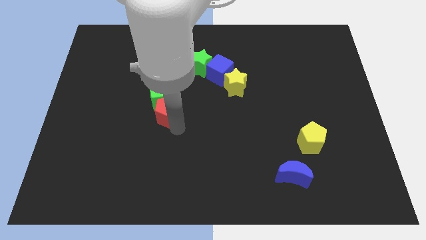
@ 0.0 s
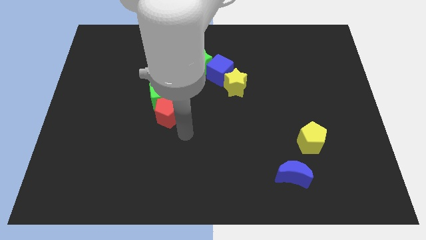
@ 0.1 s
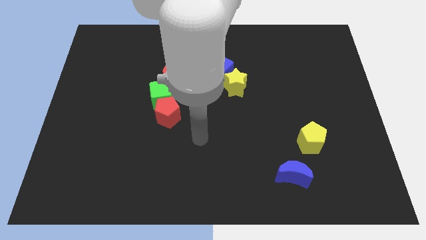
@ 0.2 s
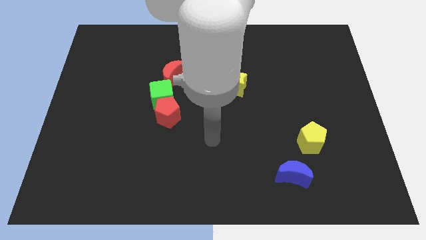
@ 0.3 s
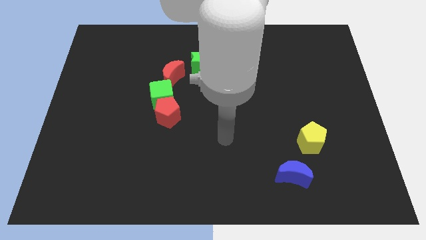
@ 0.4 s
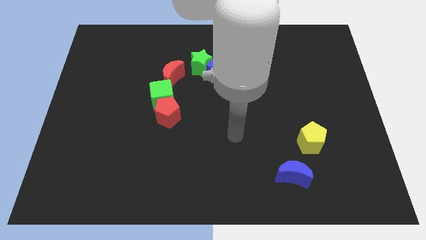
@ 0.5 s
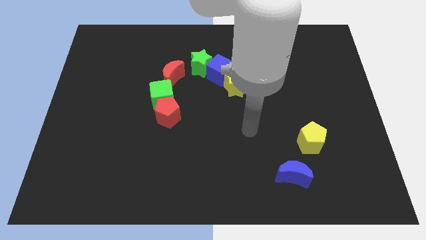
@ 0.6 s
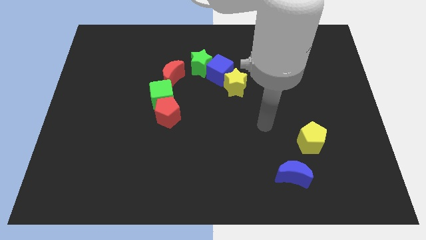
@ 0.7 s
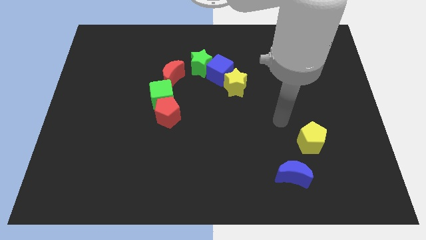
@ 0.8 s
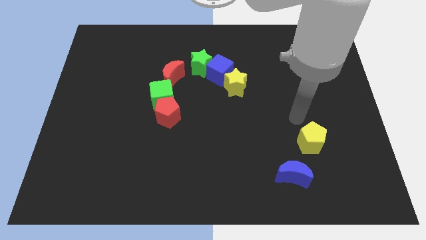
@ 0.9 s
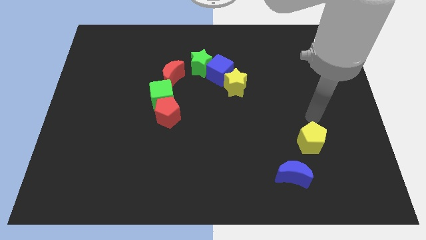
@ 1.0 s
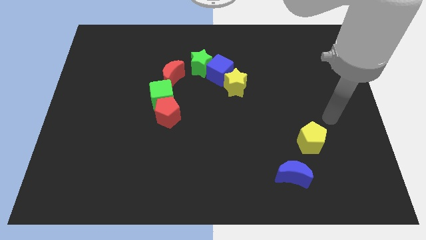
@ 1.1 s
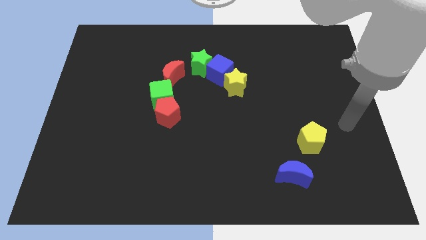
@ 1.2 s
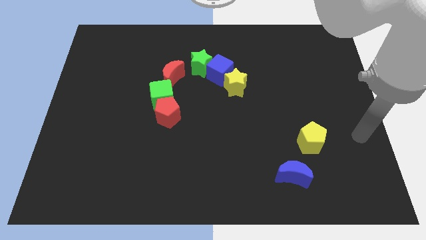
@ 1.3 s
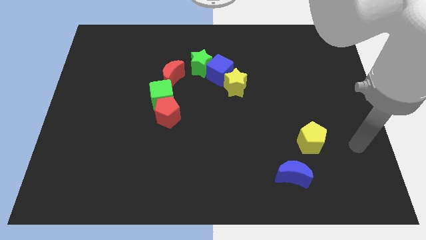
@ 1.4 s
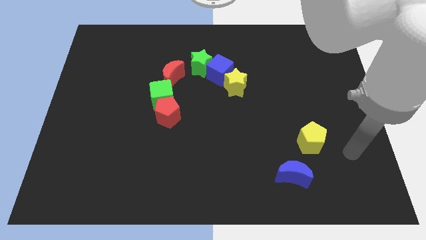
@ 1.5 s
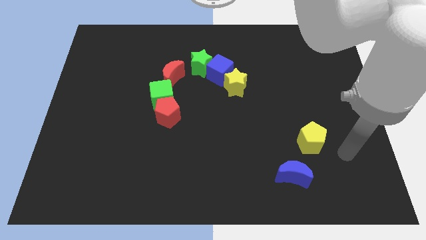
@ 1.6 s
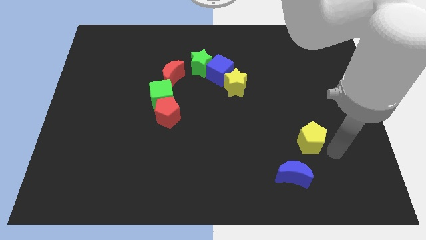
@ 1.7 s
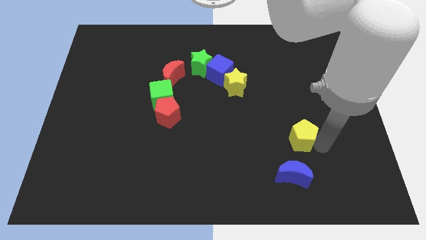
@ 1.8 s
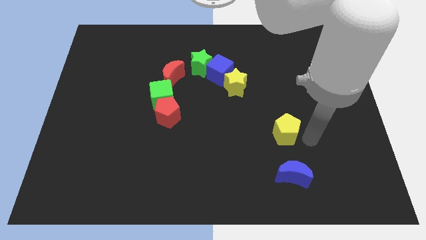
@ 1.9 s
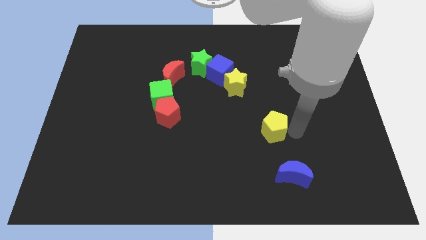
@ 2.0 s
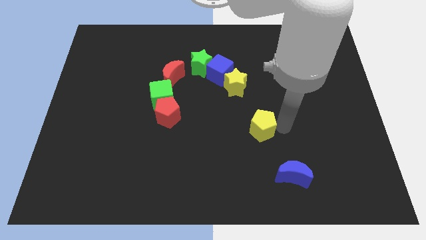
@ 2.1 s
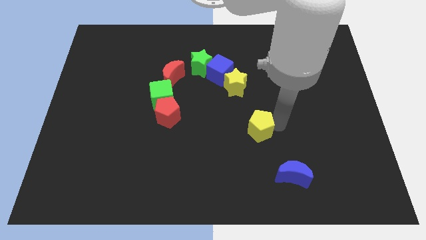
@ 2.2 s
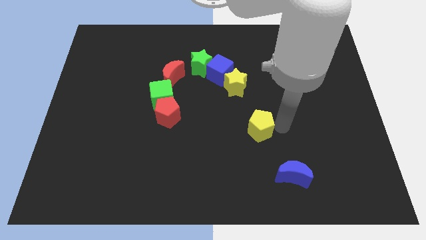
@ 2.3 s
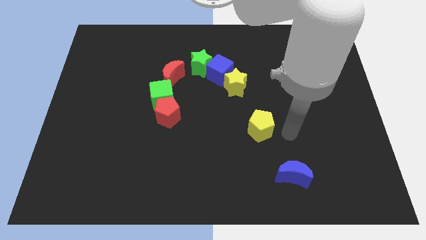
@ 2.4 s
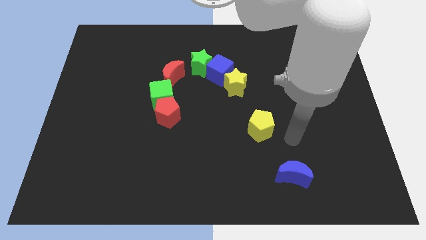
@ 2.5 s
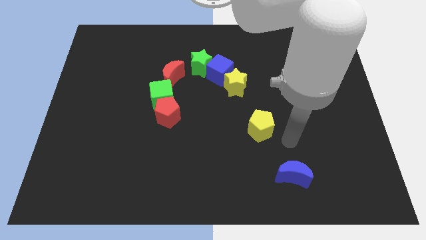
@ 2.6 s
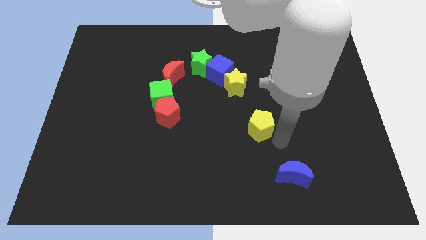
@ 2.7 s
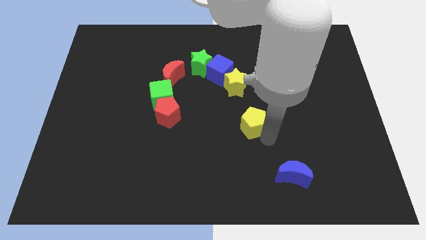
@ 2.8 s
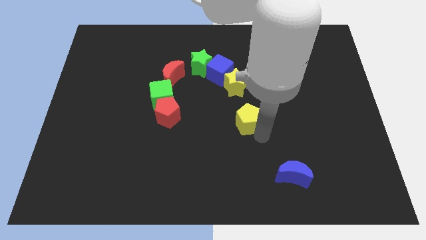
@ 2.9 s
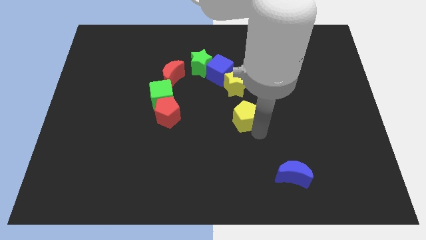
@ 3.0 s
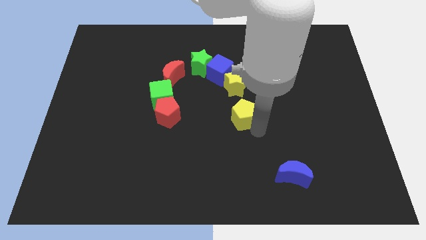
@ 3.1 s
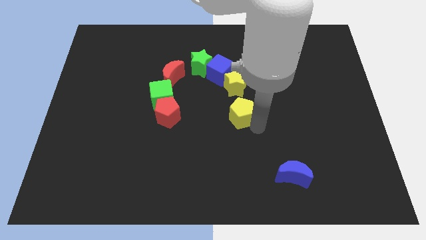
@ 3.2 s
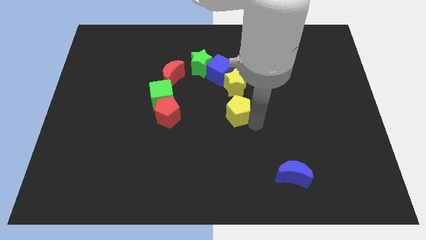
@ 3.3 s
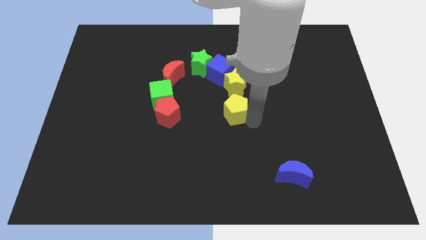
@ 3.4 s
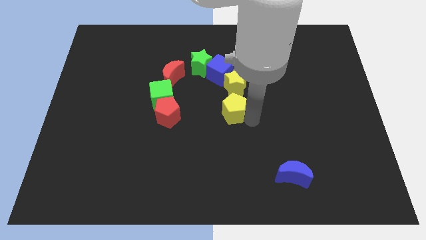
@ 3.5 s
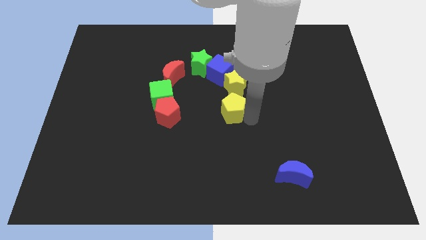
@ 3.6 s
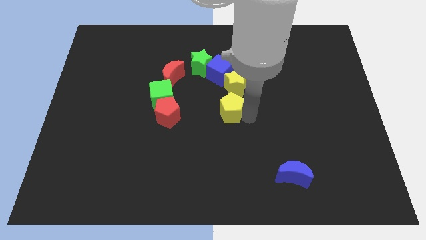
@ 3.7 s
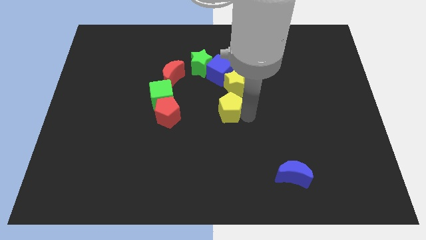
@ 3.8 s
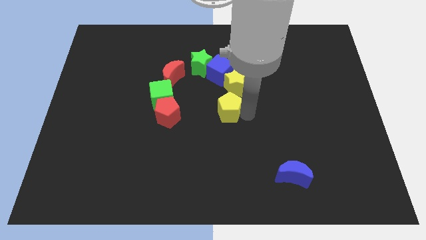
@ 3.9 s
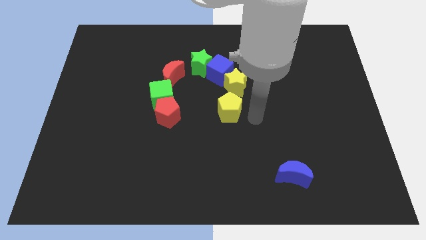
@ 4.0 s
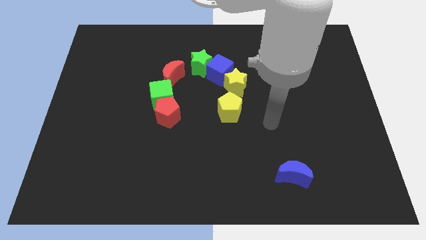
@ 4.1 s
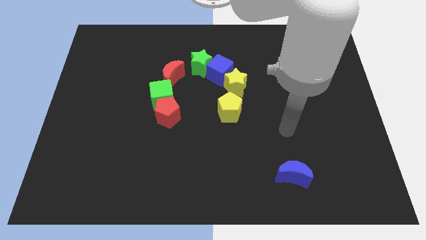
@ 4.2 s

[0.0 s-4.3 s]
push the yellow pentagon to the bottom of the yellow star

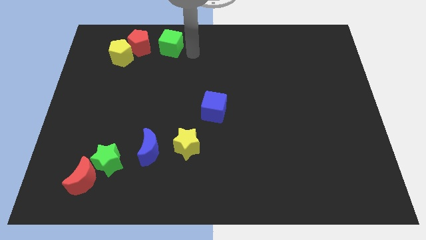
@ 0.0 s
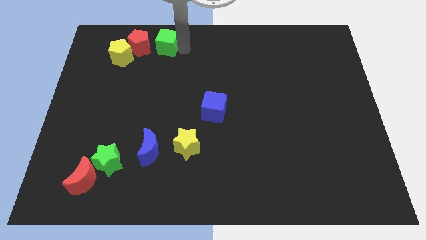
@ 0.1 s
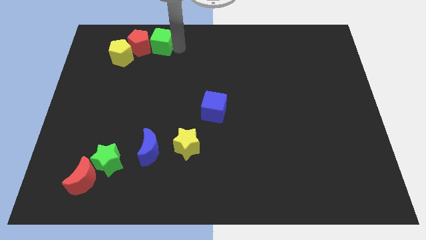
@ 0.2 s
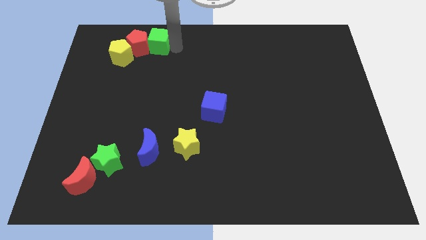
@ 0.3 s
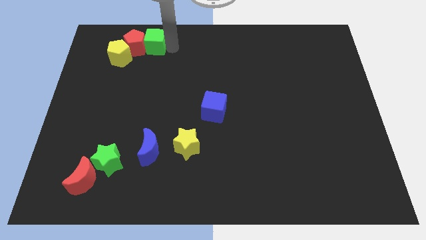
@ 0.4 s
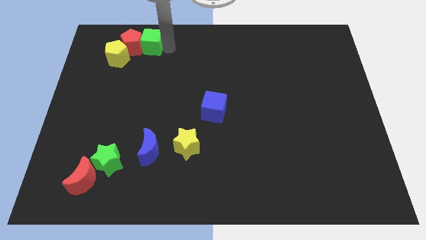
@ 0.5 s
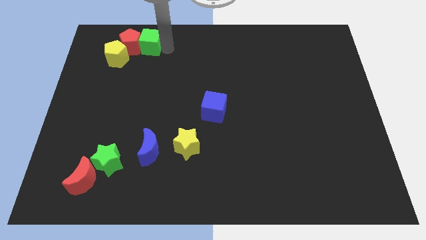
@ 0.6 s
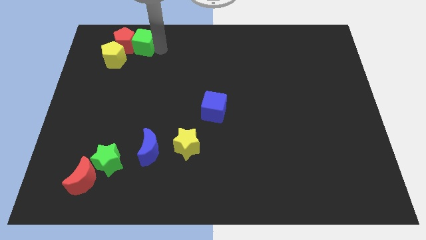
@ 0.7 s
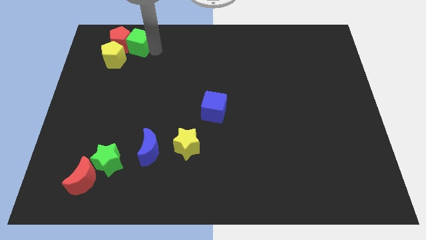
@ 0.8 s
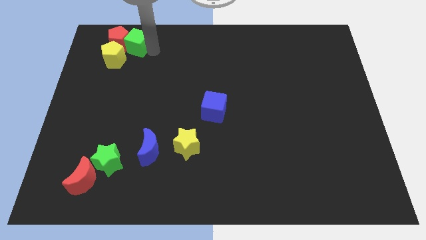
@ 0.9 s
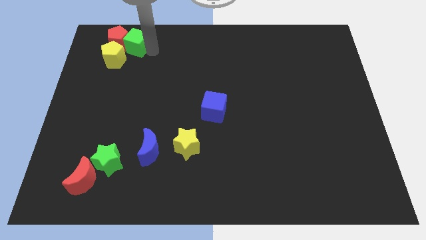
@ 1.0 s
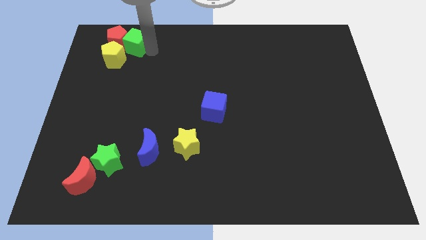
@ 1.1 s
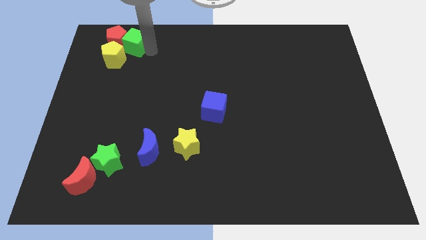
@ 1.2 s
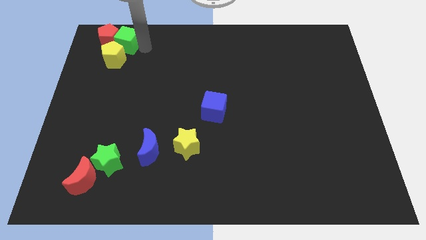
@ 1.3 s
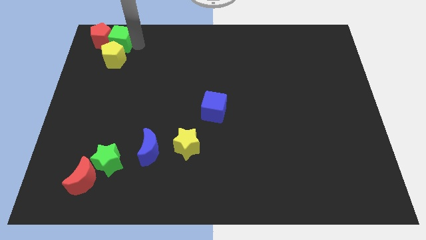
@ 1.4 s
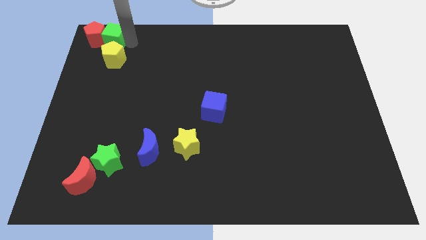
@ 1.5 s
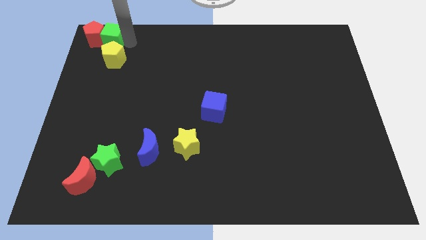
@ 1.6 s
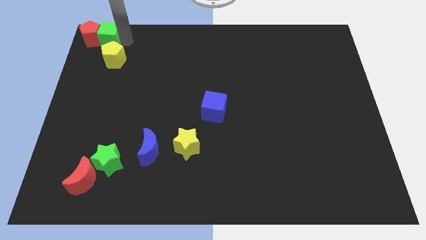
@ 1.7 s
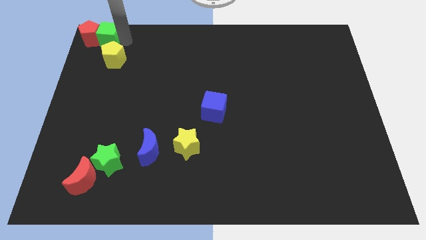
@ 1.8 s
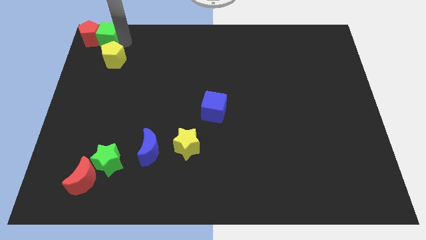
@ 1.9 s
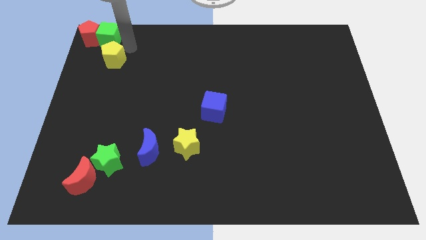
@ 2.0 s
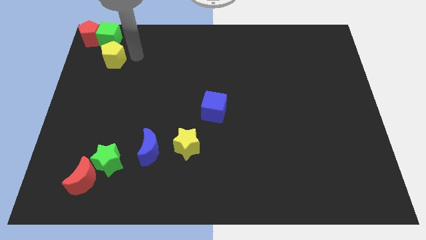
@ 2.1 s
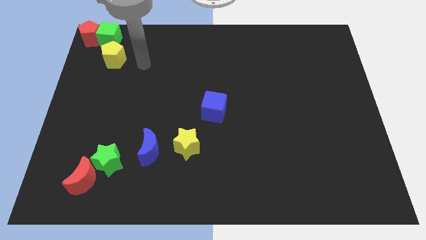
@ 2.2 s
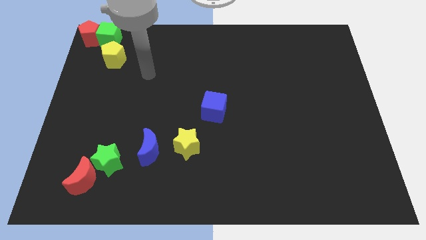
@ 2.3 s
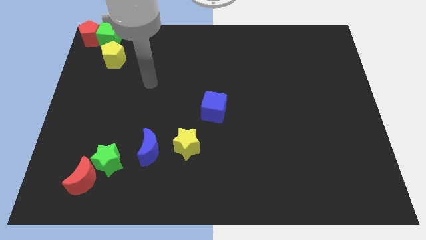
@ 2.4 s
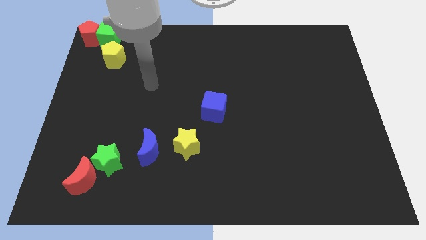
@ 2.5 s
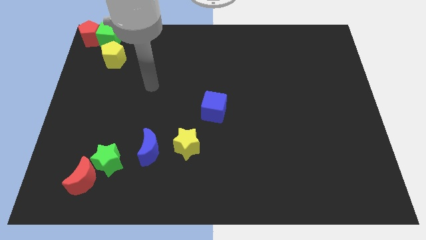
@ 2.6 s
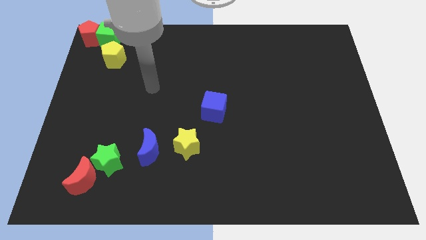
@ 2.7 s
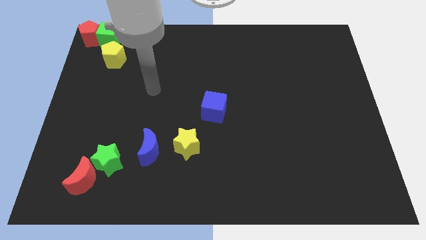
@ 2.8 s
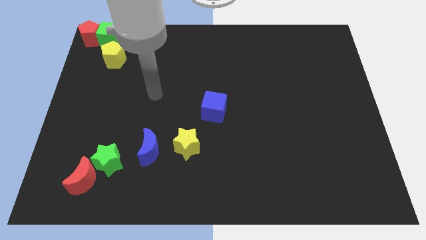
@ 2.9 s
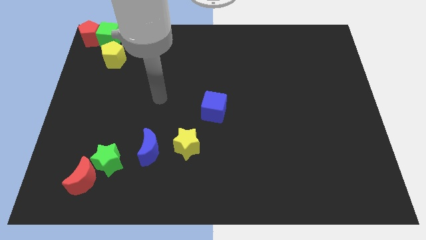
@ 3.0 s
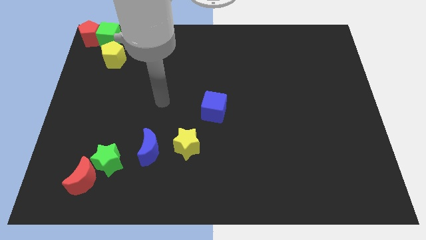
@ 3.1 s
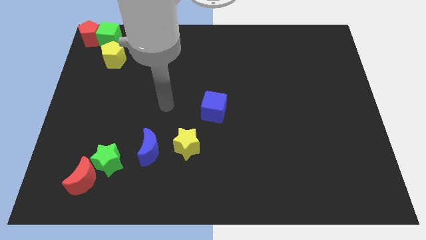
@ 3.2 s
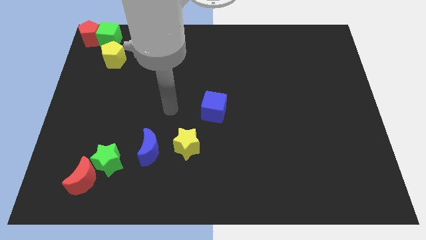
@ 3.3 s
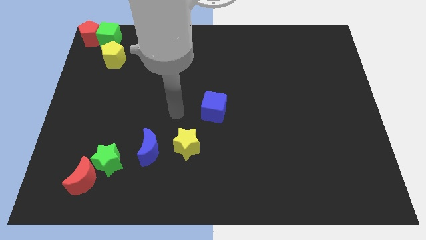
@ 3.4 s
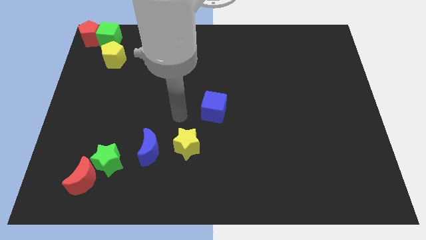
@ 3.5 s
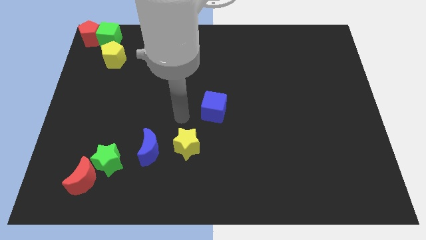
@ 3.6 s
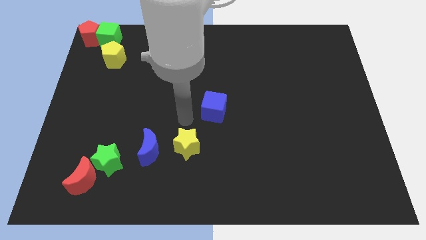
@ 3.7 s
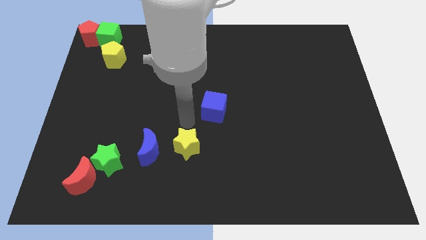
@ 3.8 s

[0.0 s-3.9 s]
place your arm above the yellow star

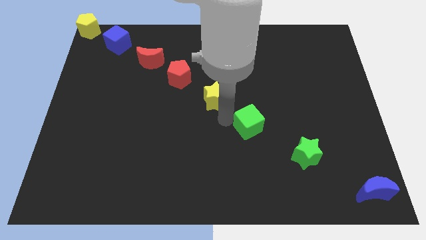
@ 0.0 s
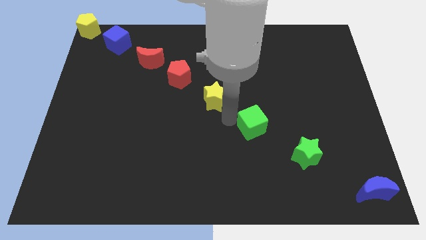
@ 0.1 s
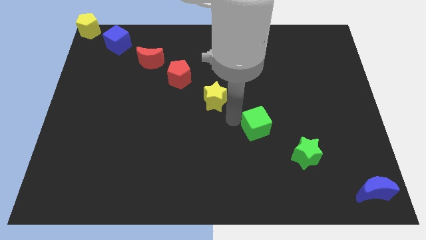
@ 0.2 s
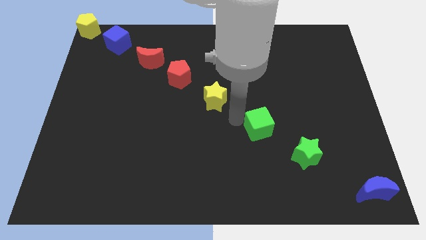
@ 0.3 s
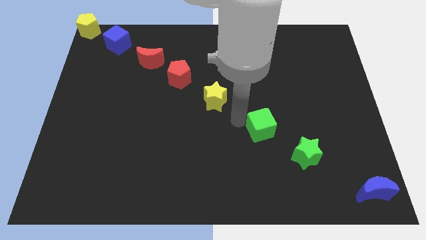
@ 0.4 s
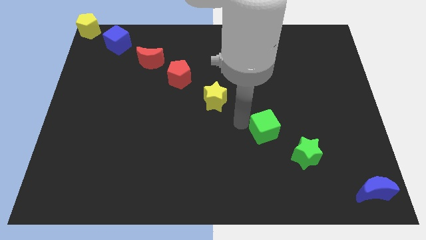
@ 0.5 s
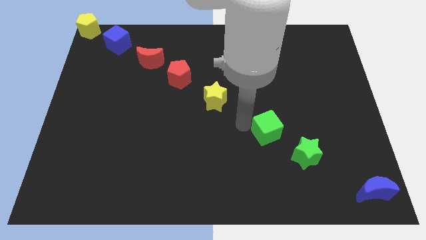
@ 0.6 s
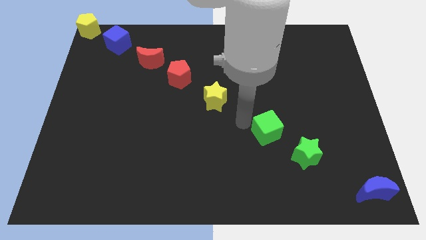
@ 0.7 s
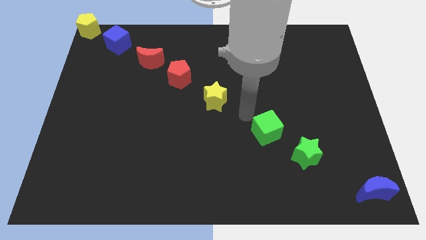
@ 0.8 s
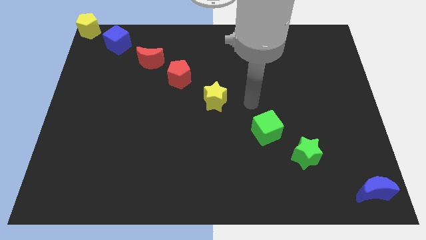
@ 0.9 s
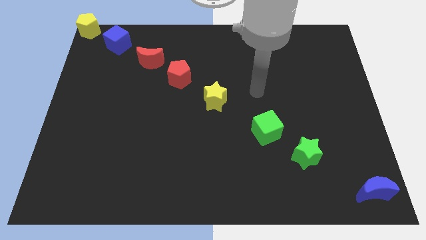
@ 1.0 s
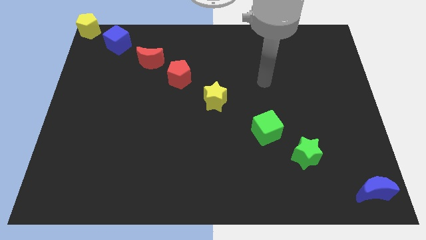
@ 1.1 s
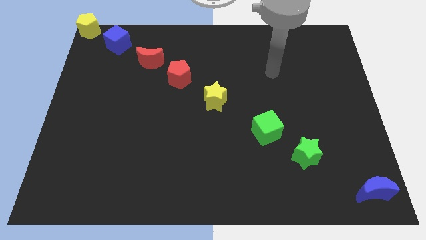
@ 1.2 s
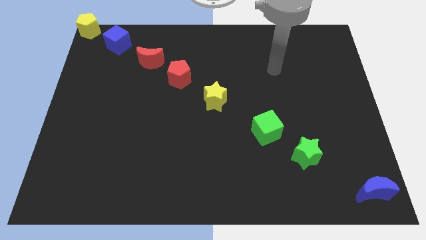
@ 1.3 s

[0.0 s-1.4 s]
push the green cube to the bottom right side of the yellow star on the board
